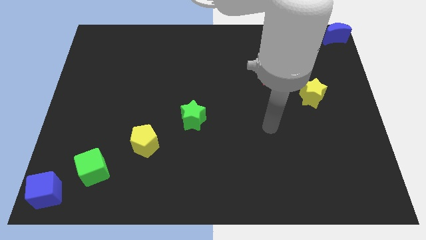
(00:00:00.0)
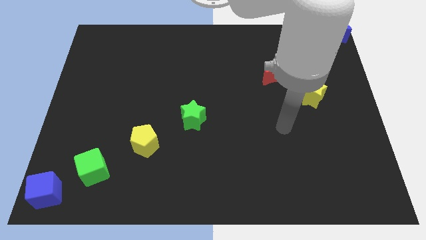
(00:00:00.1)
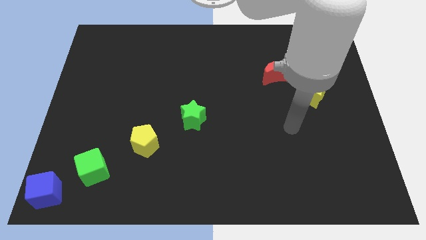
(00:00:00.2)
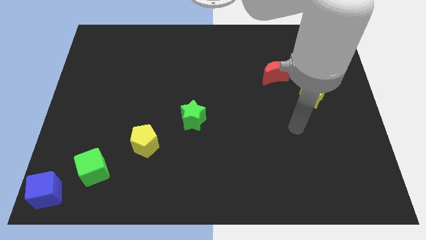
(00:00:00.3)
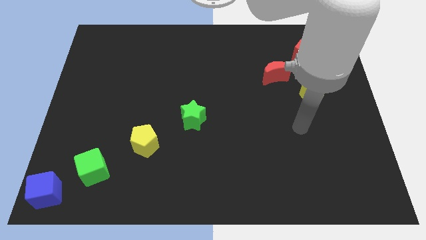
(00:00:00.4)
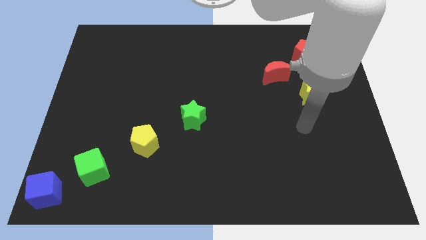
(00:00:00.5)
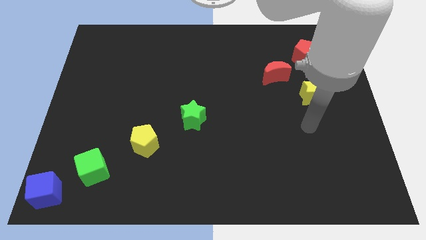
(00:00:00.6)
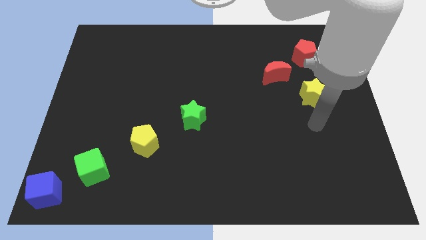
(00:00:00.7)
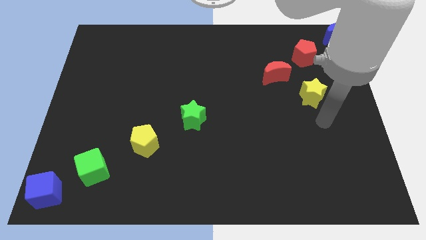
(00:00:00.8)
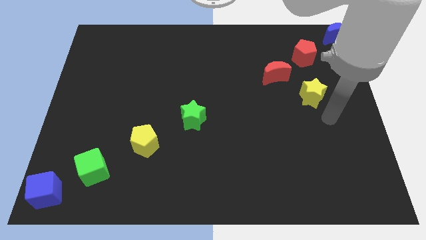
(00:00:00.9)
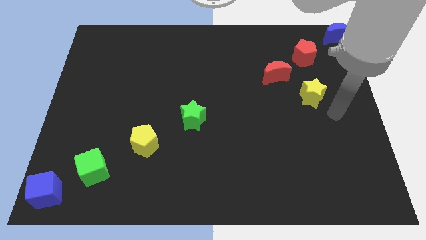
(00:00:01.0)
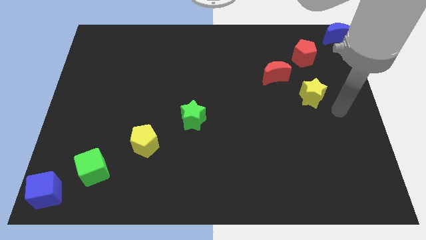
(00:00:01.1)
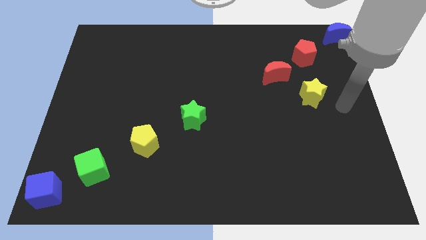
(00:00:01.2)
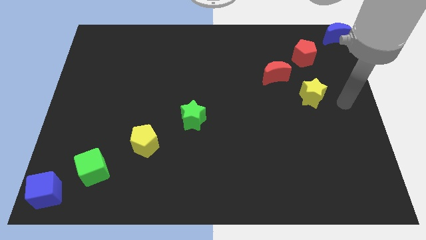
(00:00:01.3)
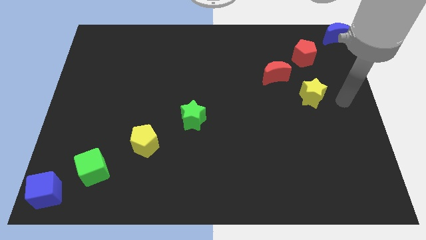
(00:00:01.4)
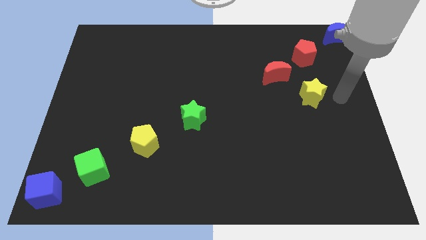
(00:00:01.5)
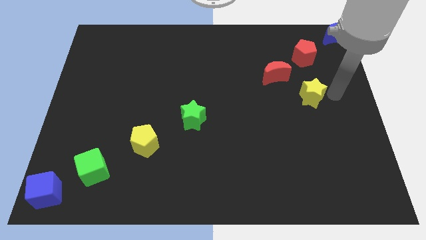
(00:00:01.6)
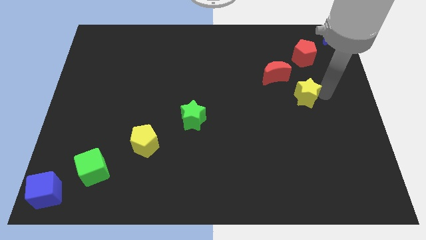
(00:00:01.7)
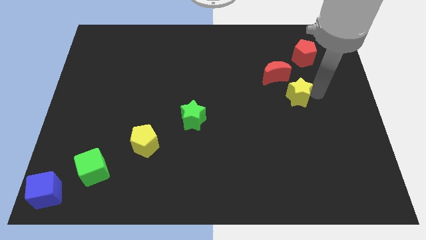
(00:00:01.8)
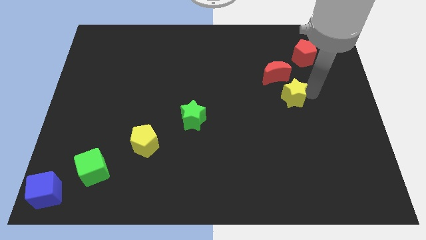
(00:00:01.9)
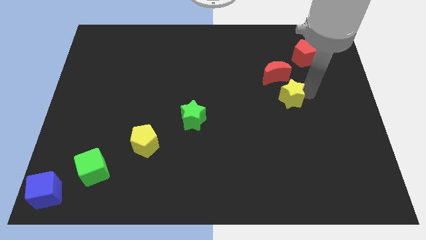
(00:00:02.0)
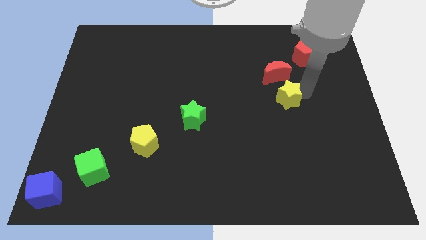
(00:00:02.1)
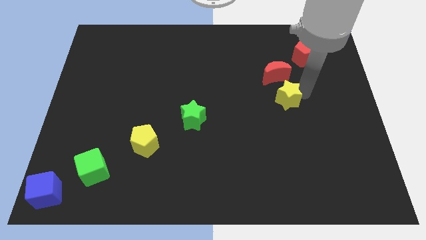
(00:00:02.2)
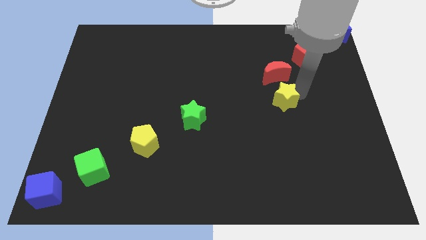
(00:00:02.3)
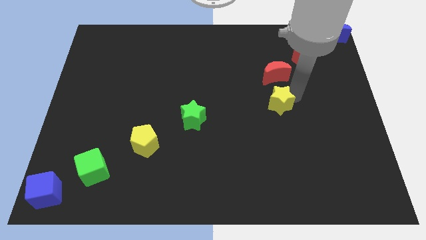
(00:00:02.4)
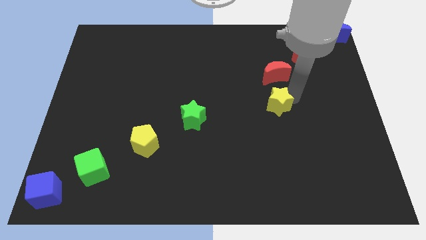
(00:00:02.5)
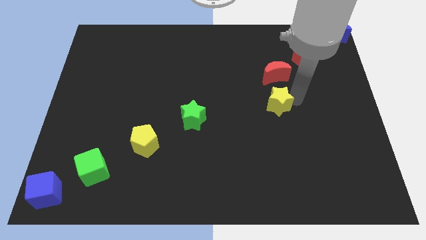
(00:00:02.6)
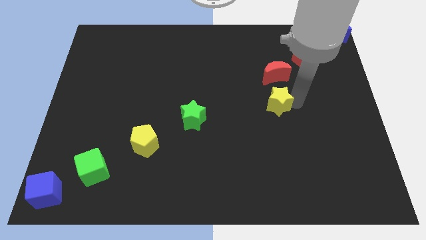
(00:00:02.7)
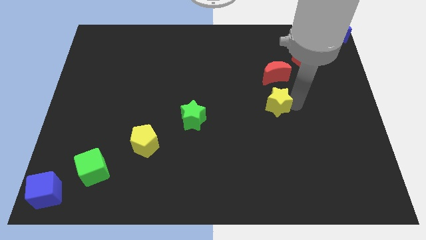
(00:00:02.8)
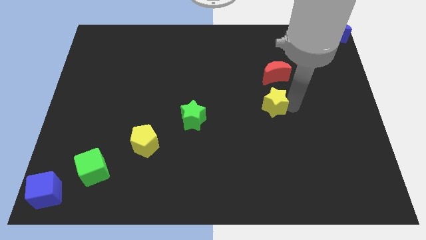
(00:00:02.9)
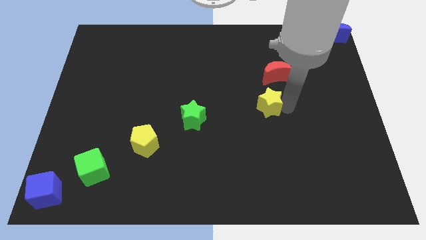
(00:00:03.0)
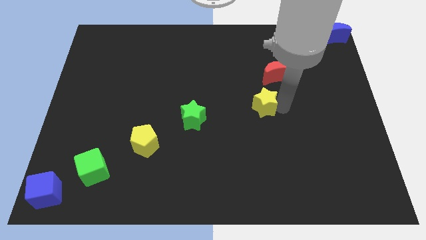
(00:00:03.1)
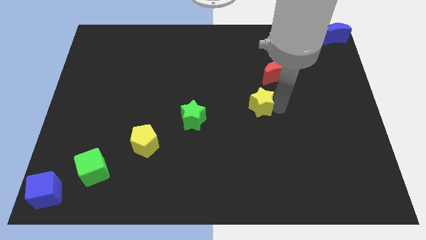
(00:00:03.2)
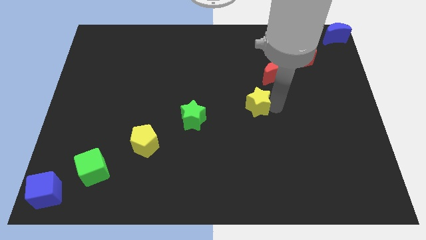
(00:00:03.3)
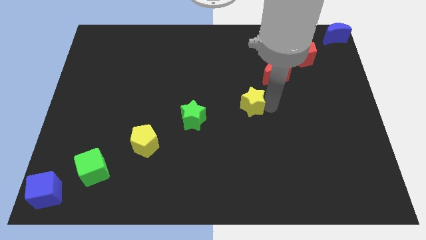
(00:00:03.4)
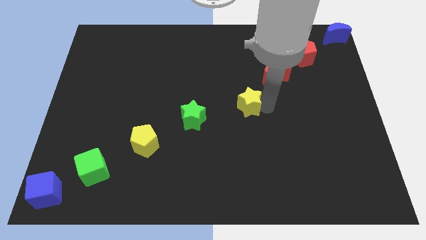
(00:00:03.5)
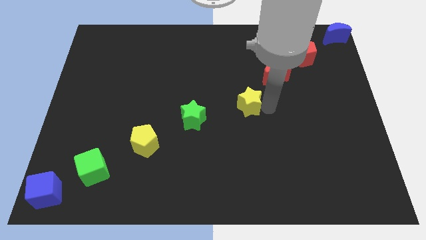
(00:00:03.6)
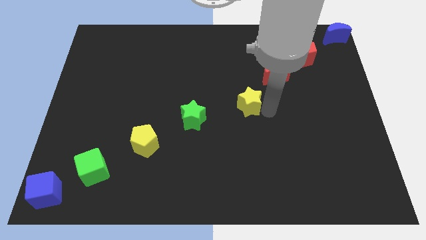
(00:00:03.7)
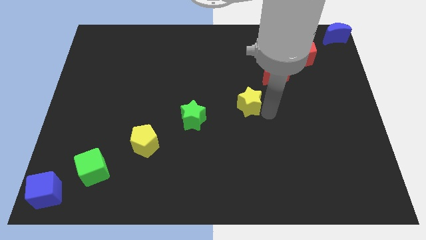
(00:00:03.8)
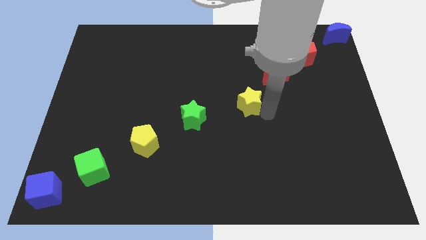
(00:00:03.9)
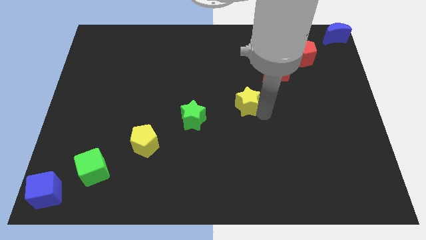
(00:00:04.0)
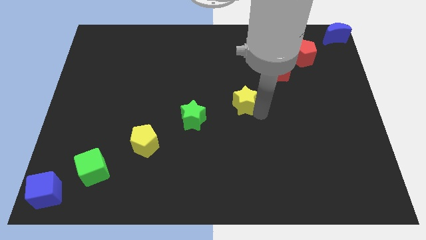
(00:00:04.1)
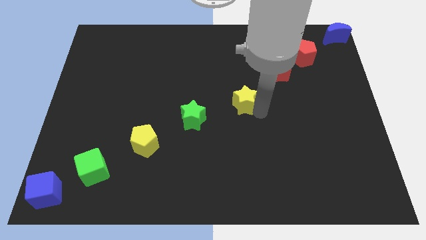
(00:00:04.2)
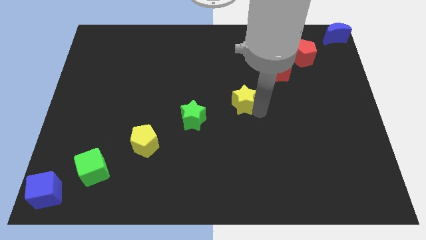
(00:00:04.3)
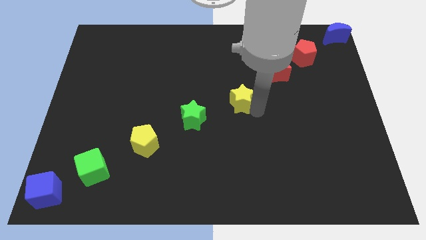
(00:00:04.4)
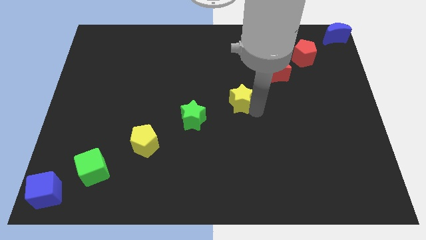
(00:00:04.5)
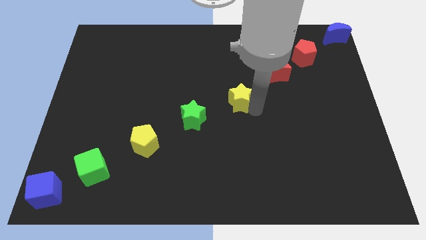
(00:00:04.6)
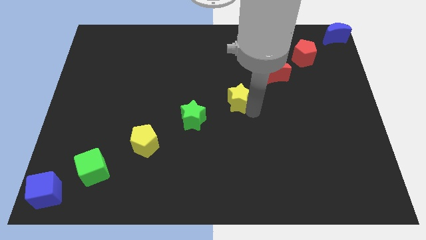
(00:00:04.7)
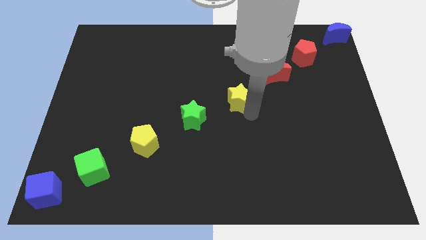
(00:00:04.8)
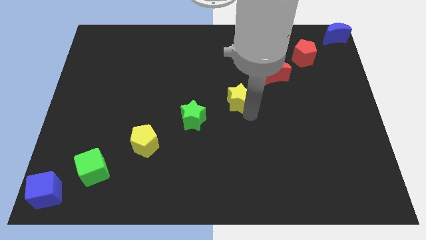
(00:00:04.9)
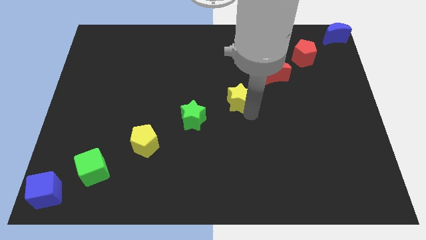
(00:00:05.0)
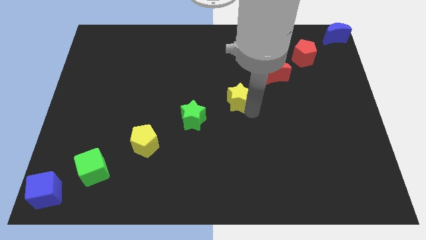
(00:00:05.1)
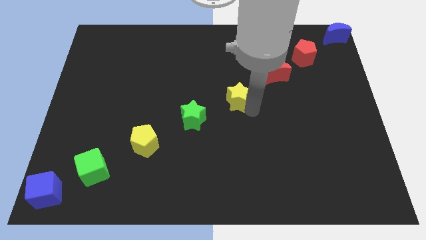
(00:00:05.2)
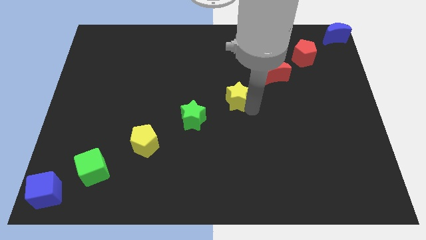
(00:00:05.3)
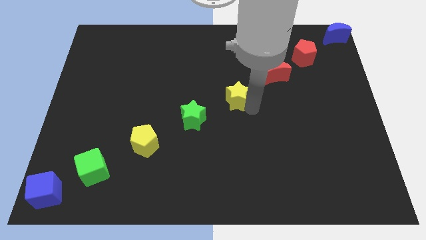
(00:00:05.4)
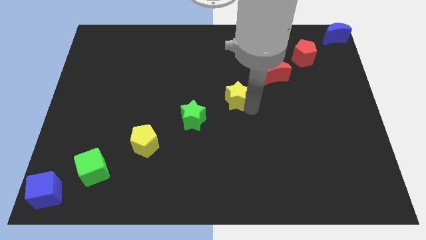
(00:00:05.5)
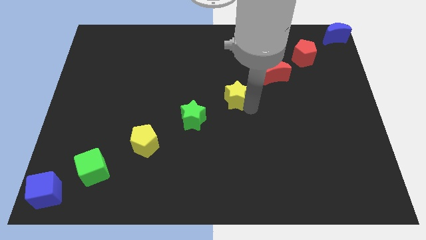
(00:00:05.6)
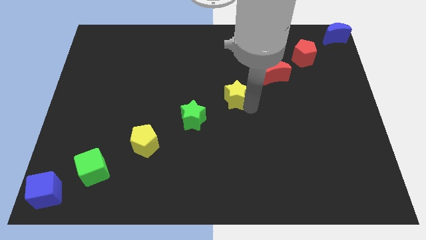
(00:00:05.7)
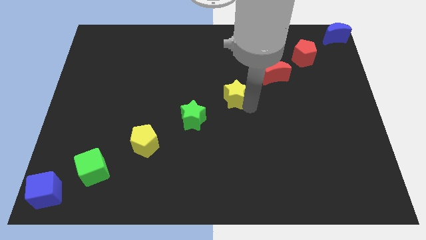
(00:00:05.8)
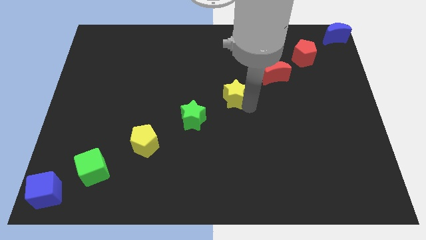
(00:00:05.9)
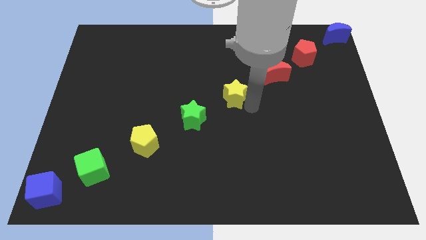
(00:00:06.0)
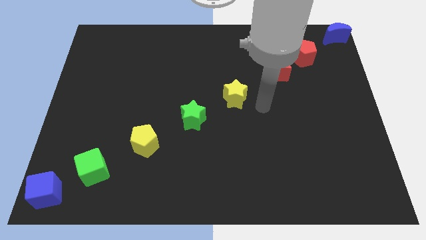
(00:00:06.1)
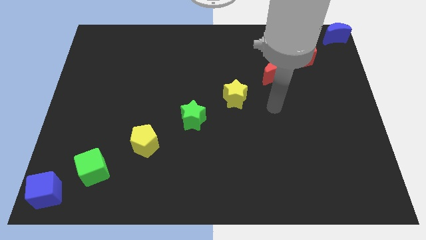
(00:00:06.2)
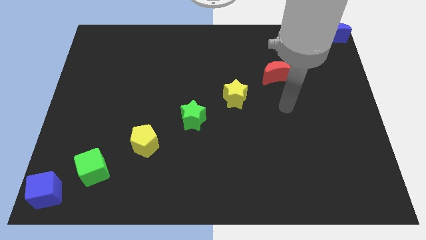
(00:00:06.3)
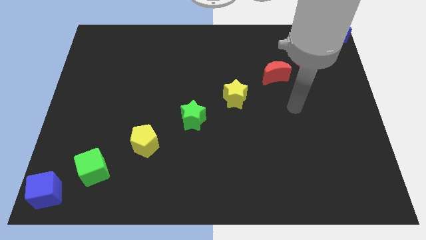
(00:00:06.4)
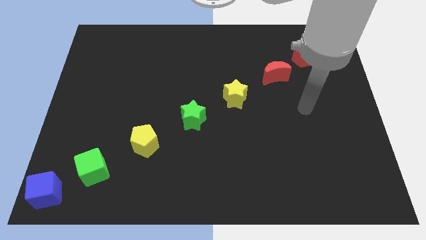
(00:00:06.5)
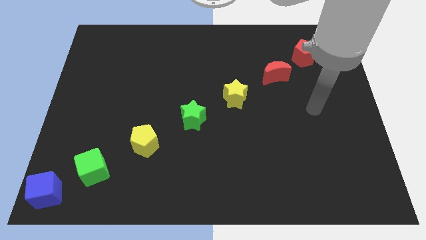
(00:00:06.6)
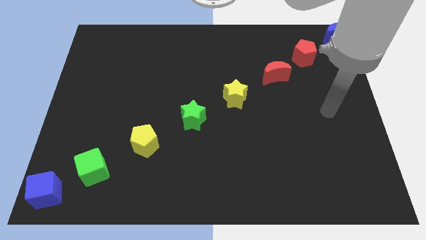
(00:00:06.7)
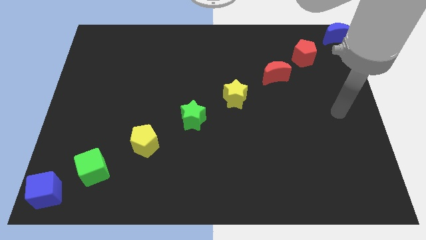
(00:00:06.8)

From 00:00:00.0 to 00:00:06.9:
place yellow star beside green star

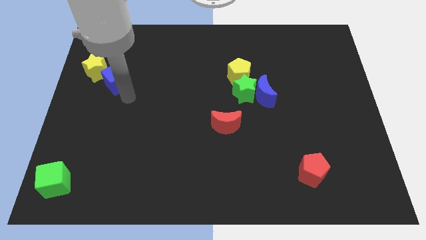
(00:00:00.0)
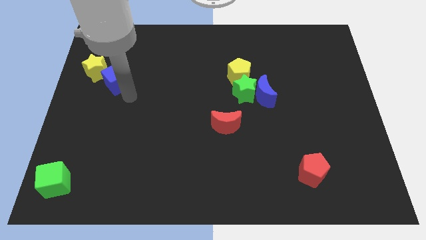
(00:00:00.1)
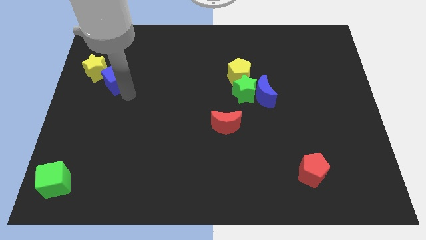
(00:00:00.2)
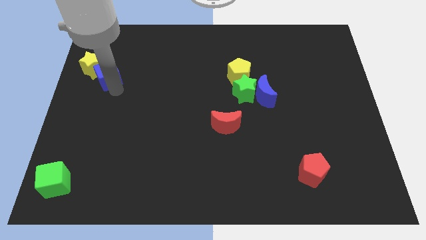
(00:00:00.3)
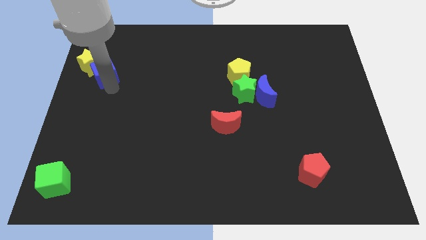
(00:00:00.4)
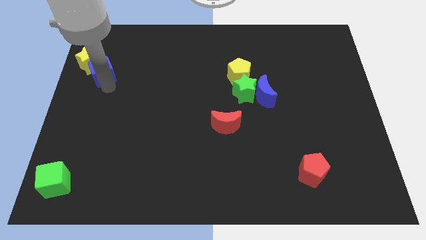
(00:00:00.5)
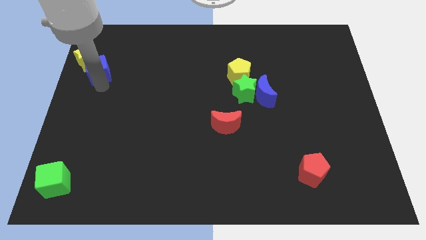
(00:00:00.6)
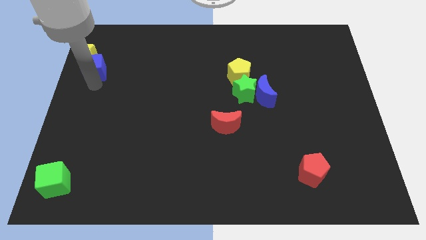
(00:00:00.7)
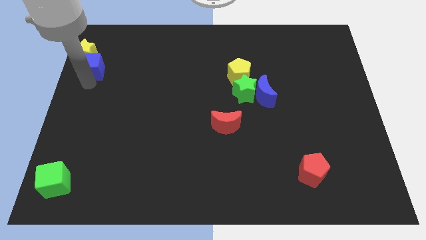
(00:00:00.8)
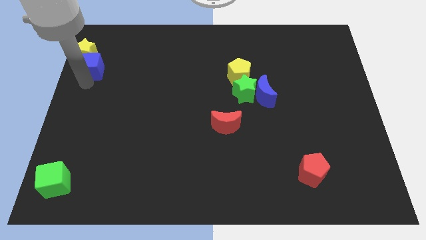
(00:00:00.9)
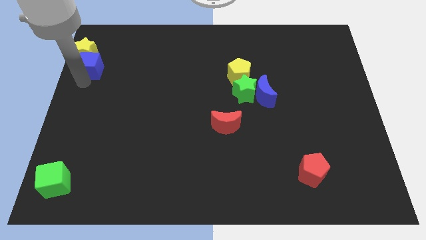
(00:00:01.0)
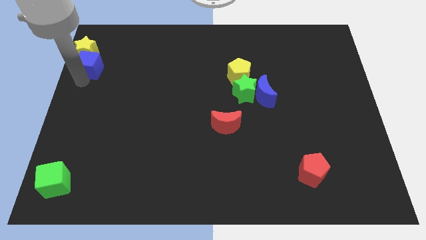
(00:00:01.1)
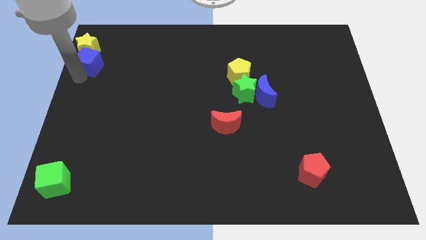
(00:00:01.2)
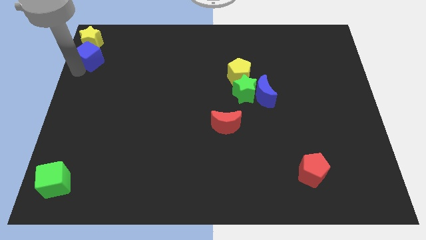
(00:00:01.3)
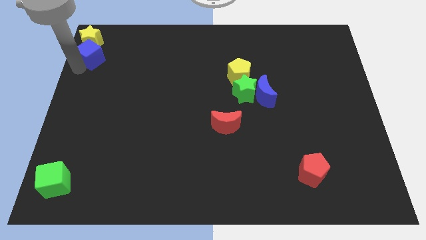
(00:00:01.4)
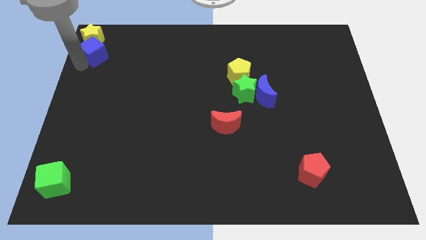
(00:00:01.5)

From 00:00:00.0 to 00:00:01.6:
push the yellow star with blue cube towards the top left of the board

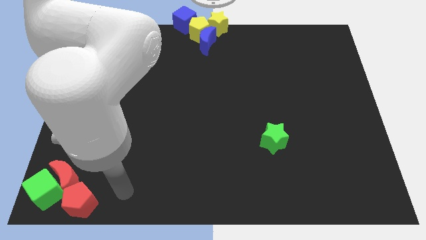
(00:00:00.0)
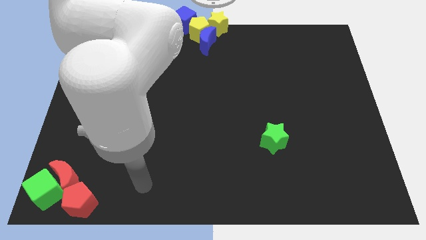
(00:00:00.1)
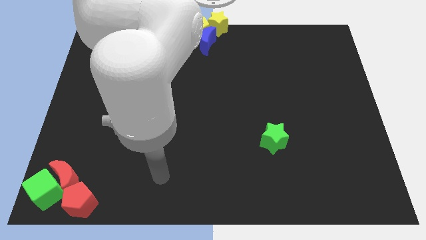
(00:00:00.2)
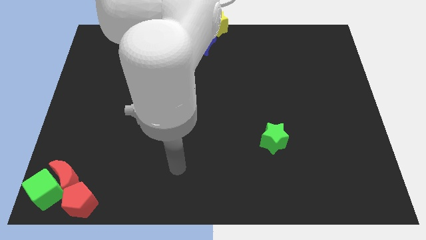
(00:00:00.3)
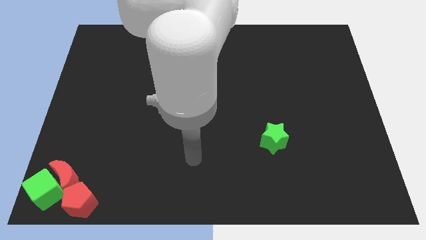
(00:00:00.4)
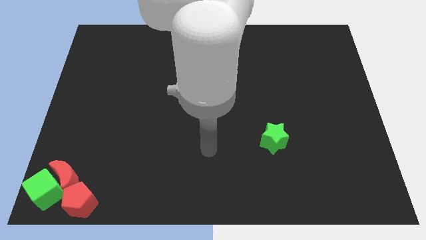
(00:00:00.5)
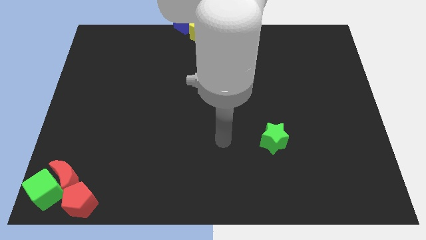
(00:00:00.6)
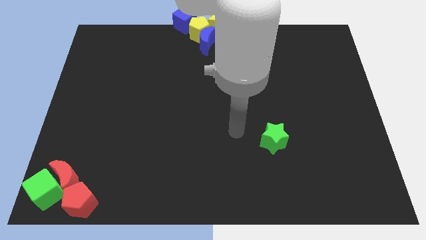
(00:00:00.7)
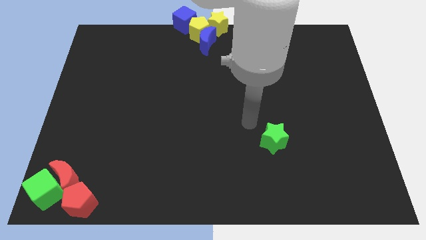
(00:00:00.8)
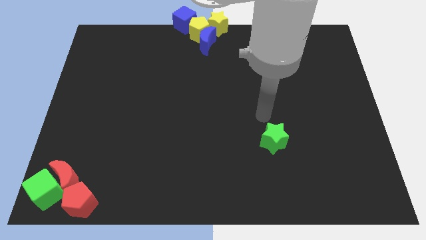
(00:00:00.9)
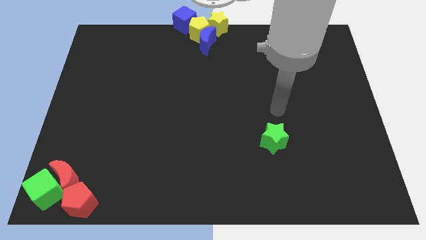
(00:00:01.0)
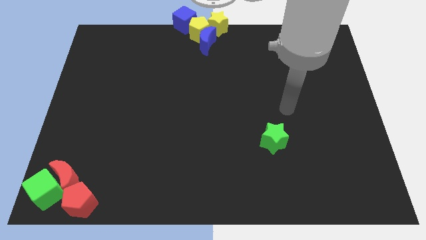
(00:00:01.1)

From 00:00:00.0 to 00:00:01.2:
move the arm towards the green star
